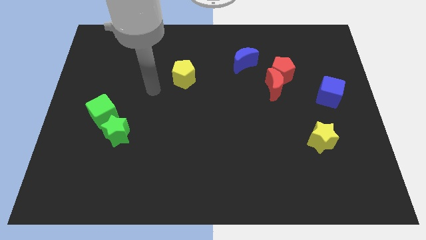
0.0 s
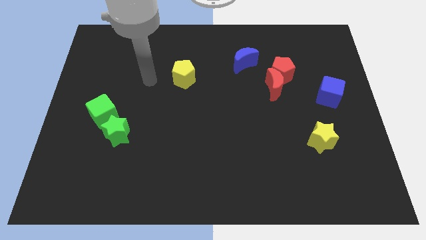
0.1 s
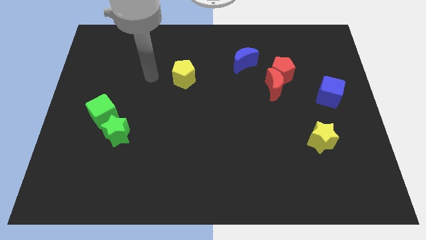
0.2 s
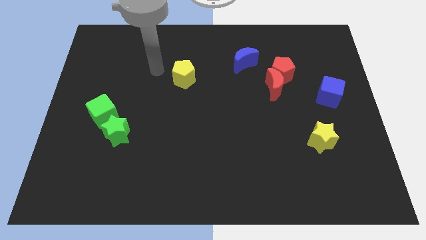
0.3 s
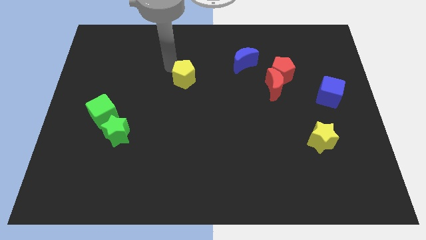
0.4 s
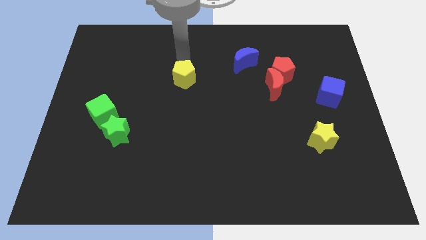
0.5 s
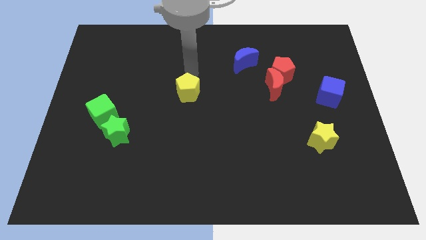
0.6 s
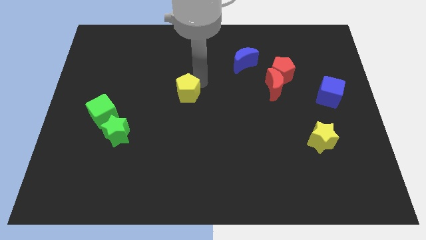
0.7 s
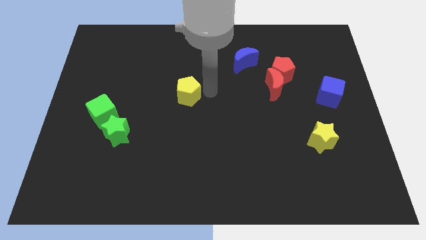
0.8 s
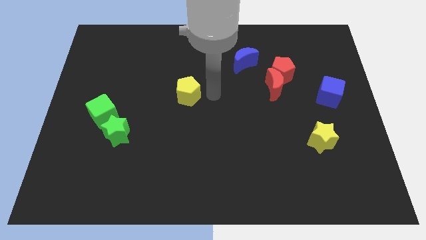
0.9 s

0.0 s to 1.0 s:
put the yellow pentagon to the left of the red crescent

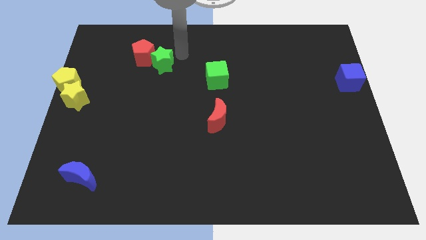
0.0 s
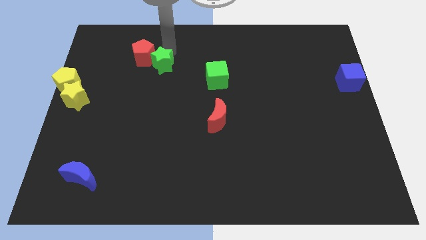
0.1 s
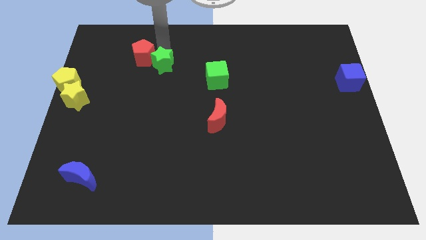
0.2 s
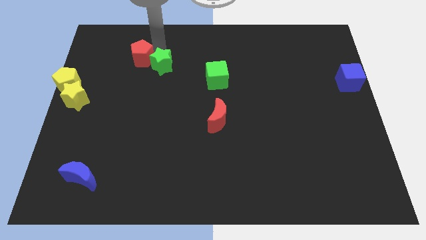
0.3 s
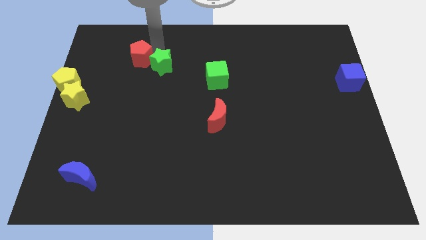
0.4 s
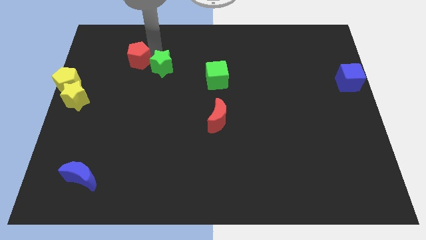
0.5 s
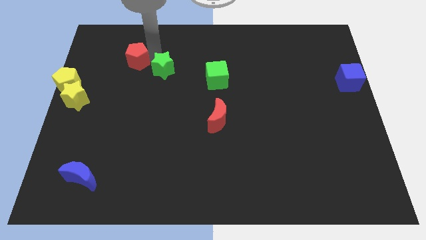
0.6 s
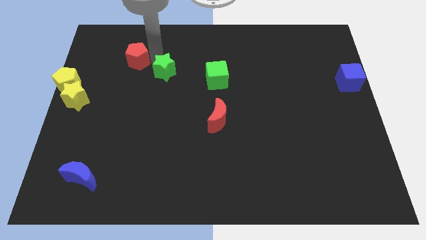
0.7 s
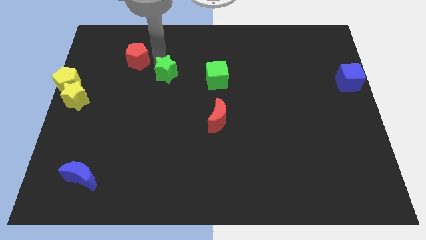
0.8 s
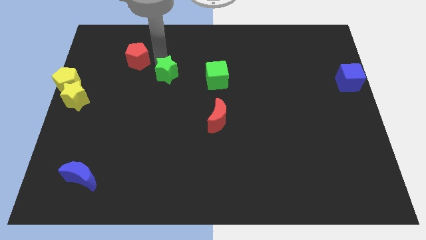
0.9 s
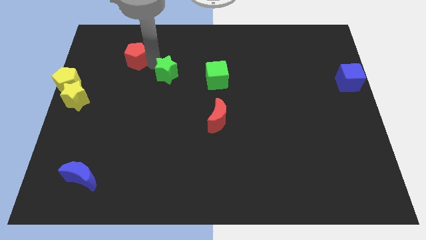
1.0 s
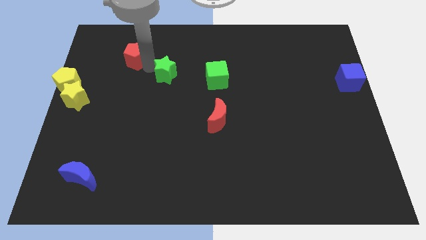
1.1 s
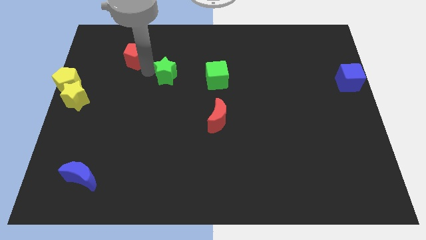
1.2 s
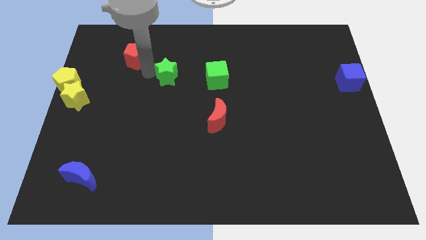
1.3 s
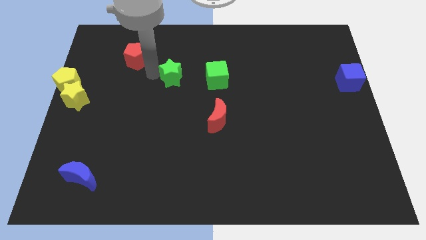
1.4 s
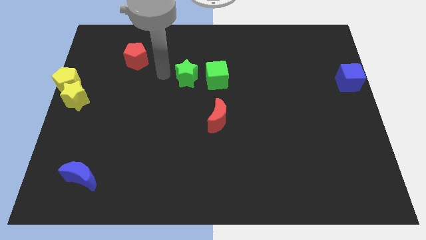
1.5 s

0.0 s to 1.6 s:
separate the red pentagon and the green star

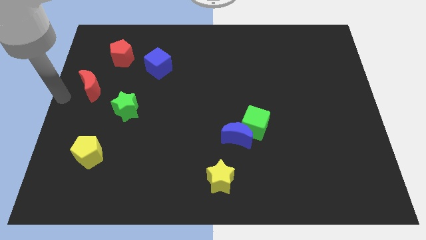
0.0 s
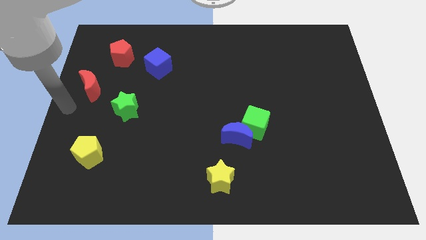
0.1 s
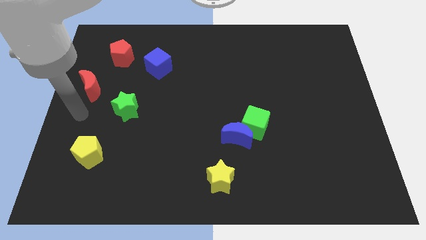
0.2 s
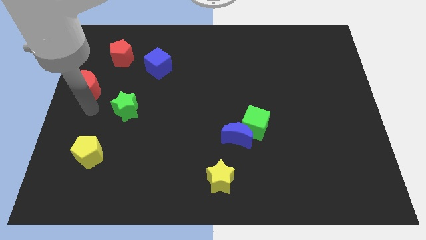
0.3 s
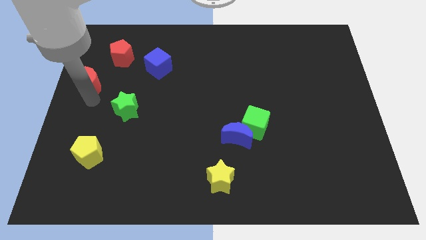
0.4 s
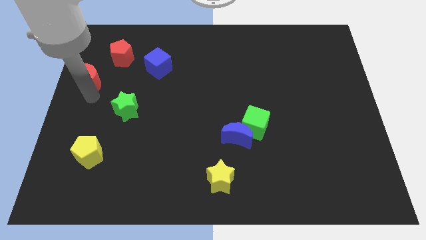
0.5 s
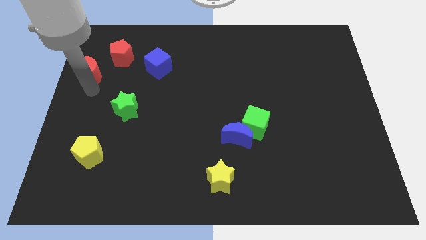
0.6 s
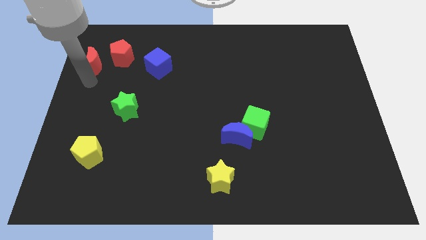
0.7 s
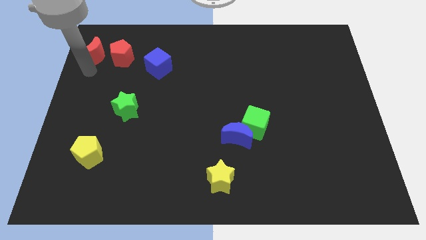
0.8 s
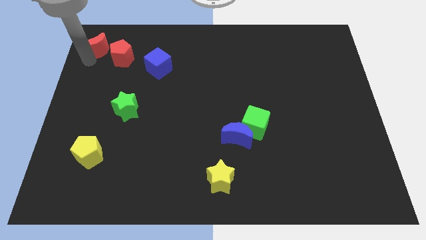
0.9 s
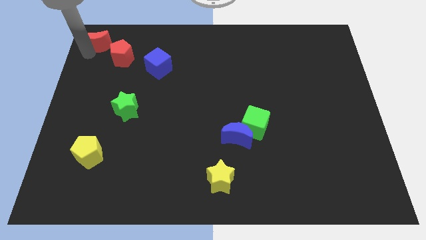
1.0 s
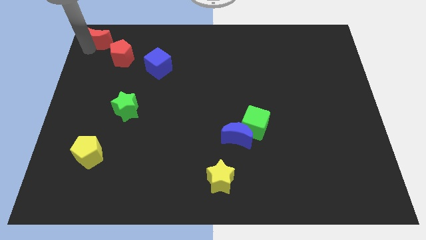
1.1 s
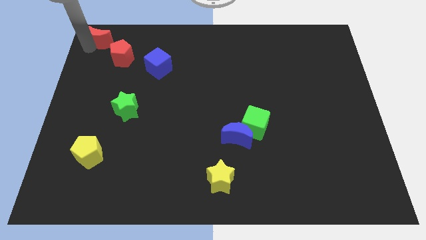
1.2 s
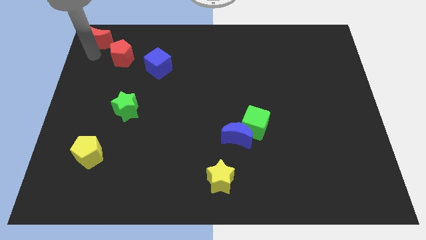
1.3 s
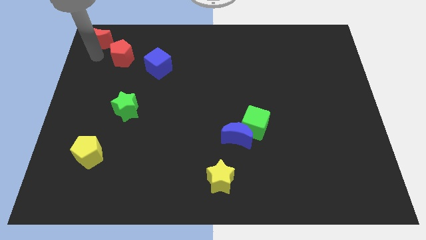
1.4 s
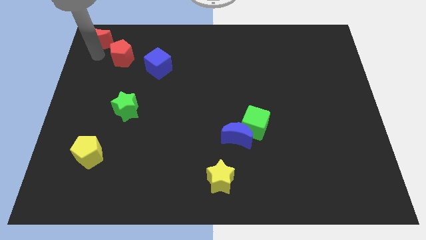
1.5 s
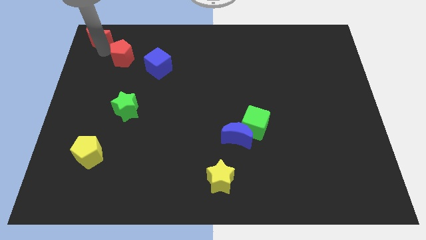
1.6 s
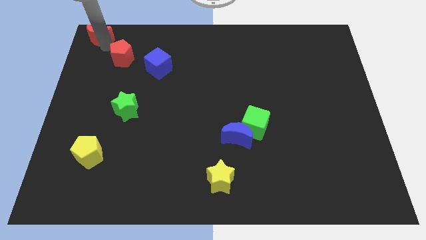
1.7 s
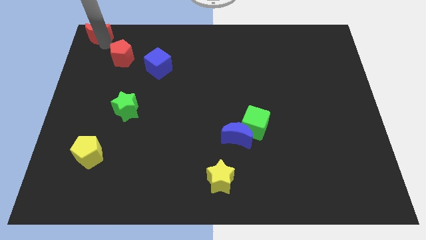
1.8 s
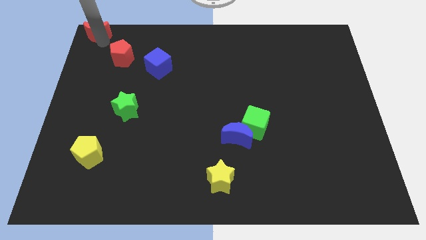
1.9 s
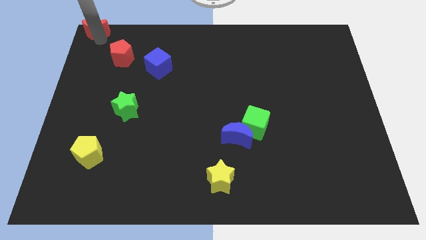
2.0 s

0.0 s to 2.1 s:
move the red crescent to the top left corner of the board

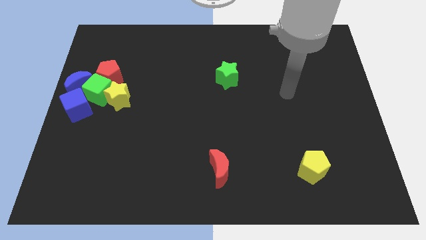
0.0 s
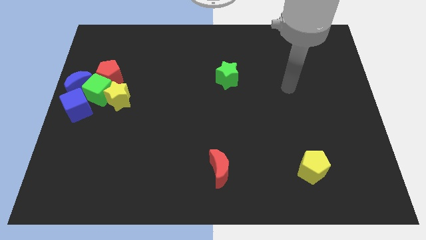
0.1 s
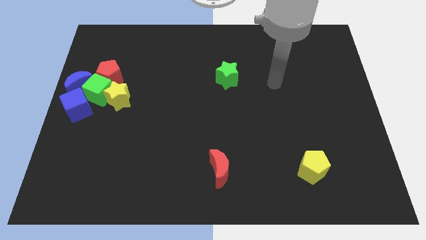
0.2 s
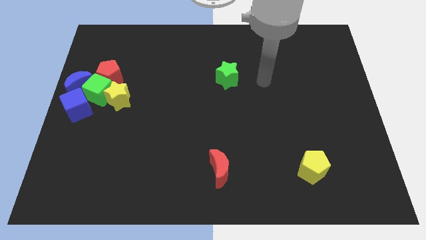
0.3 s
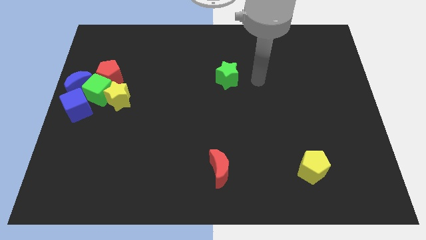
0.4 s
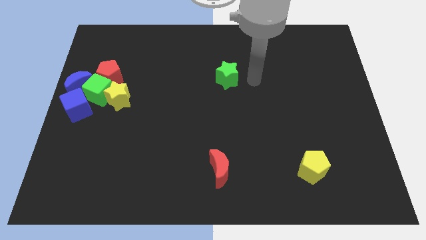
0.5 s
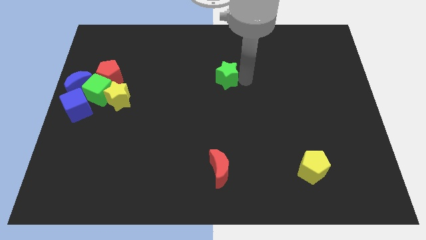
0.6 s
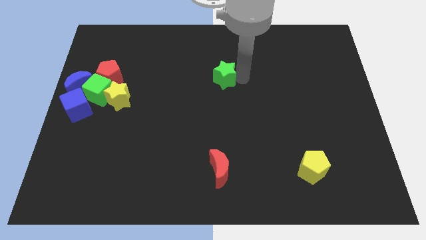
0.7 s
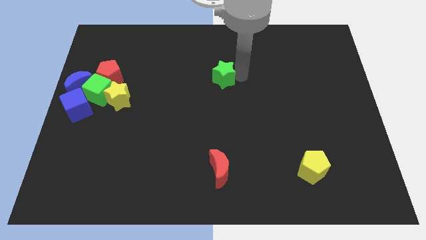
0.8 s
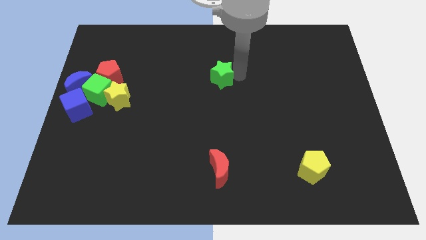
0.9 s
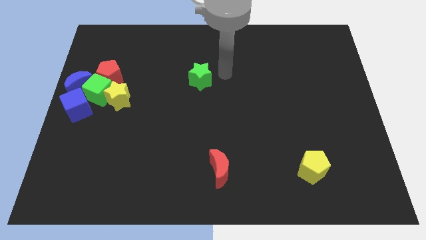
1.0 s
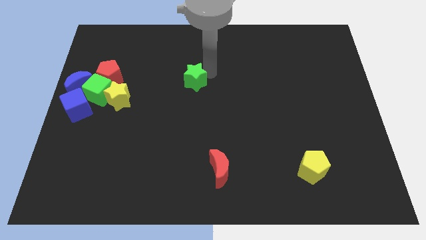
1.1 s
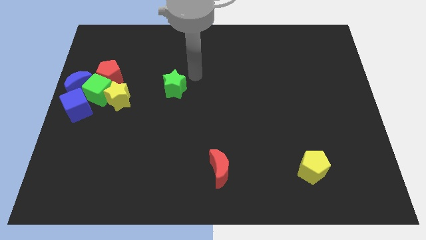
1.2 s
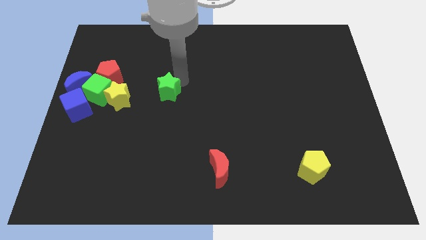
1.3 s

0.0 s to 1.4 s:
place green star parallel to yellow star

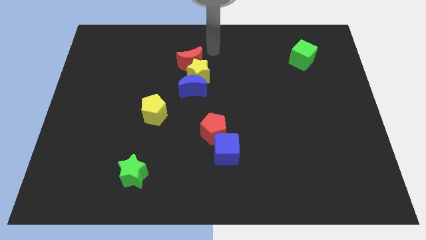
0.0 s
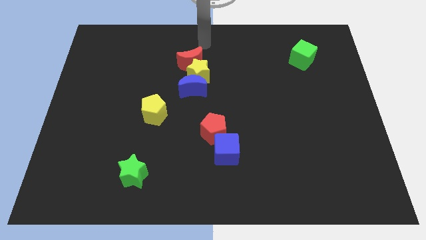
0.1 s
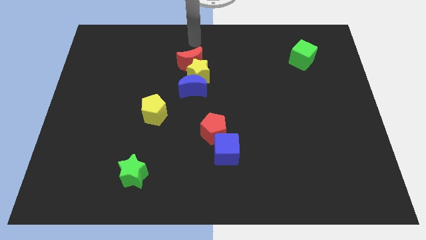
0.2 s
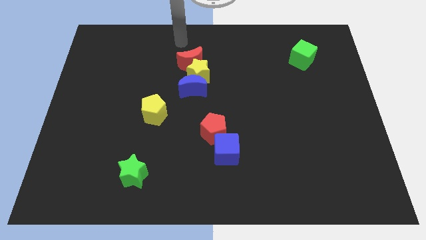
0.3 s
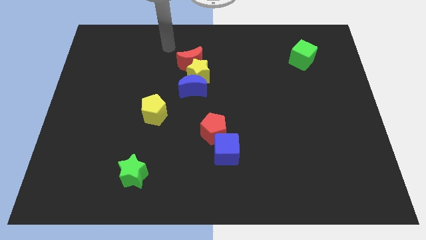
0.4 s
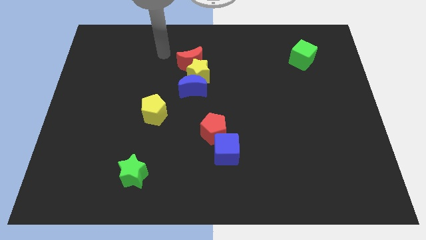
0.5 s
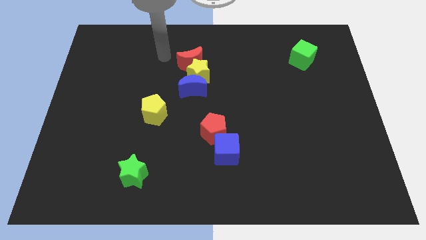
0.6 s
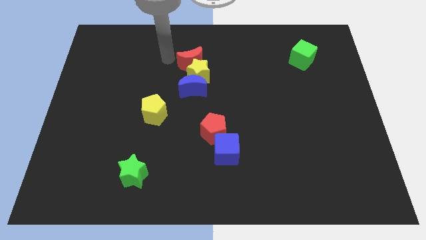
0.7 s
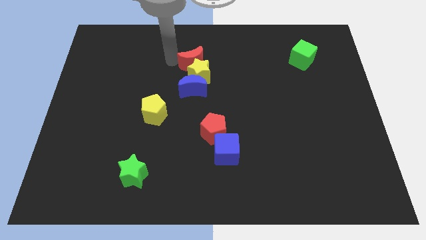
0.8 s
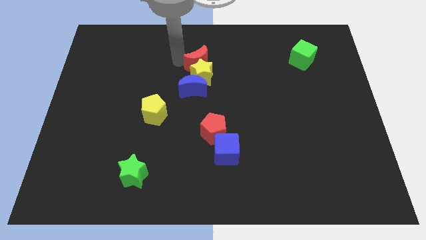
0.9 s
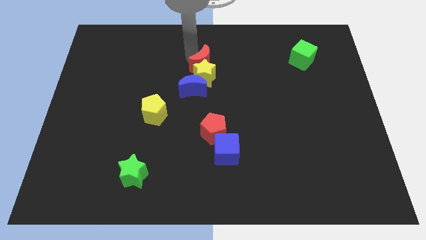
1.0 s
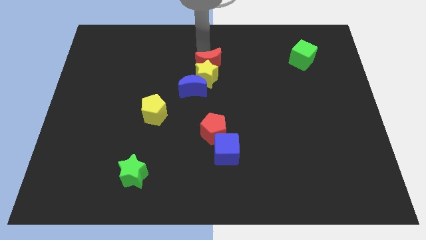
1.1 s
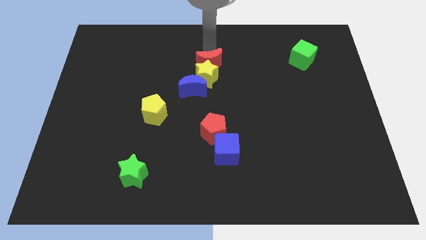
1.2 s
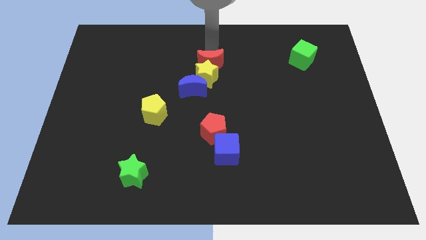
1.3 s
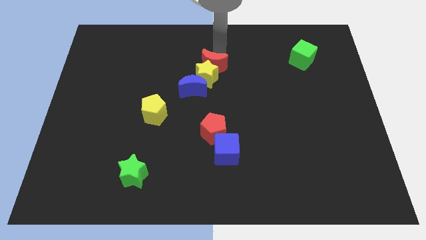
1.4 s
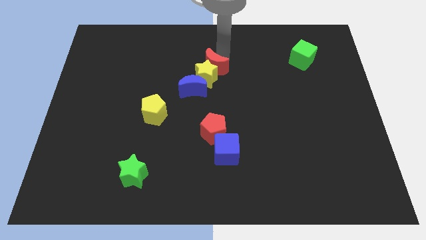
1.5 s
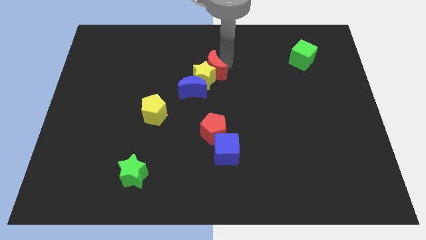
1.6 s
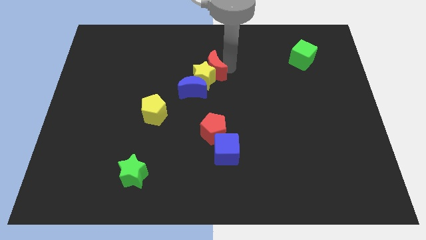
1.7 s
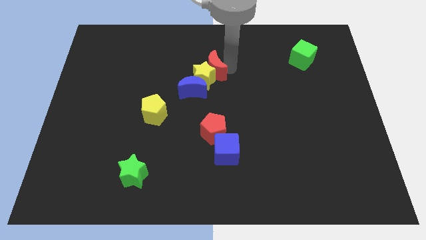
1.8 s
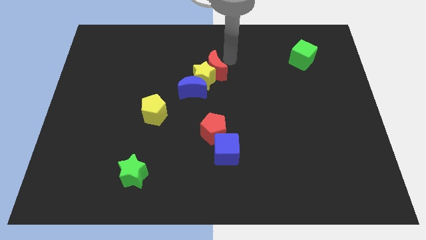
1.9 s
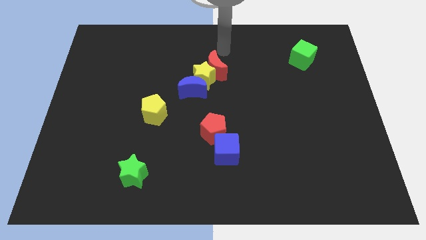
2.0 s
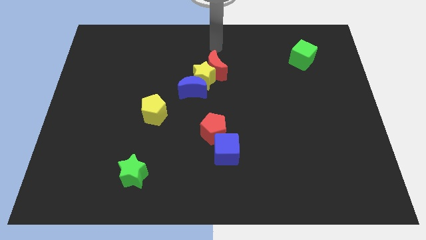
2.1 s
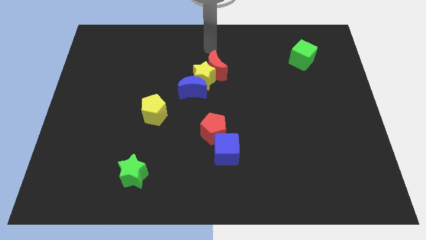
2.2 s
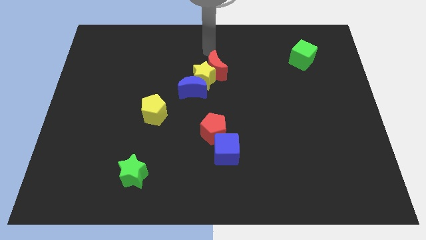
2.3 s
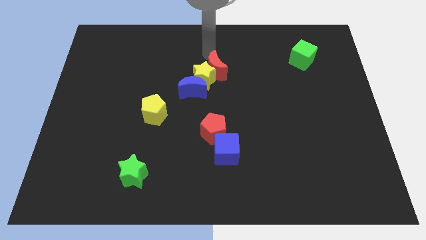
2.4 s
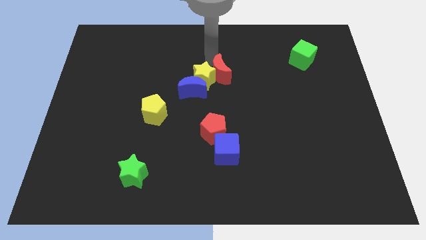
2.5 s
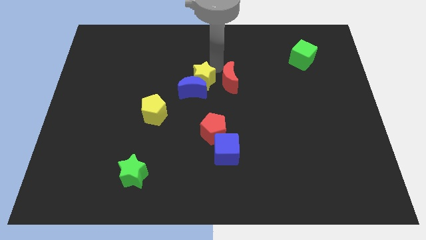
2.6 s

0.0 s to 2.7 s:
touch red crescent

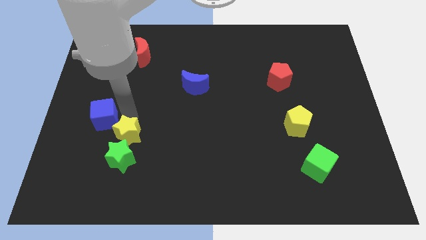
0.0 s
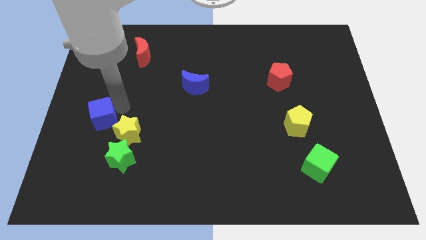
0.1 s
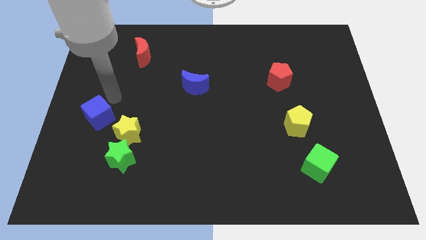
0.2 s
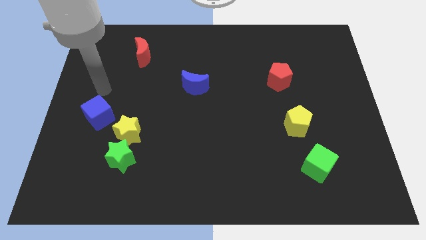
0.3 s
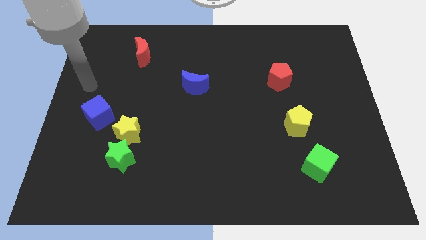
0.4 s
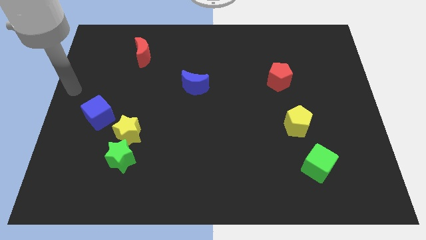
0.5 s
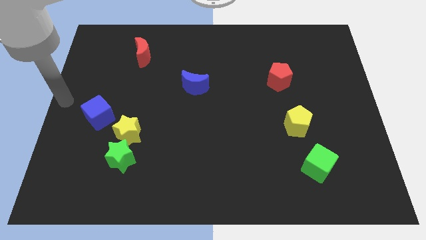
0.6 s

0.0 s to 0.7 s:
move your arm to the left center of the board
